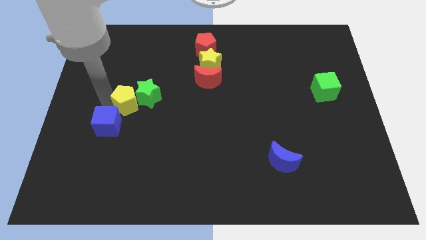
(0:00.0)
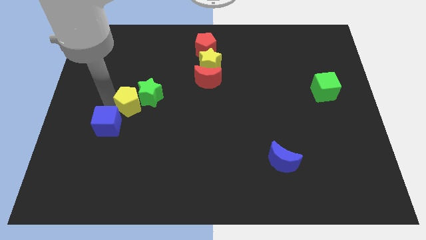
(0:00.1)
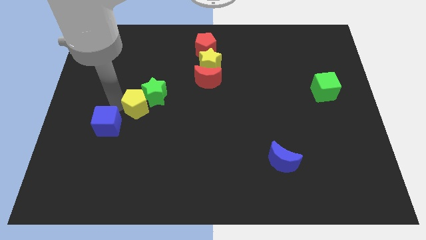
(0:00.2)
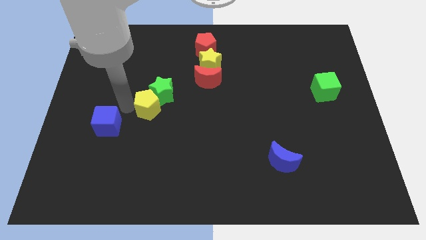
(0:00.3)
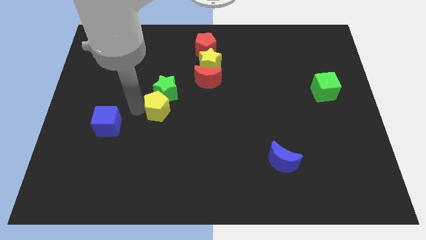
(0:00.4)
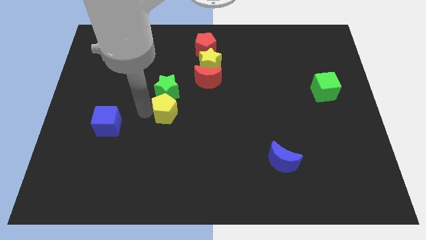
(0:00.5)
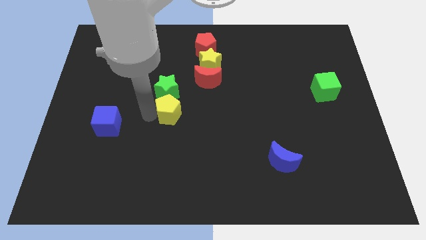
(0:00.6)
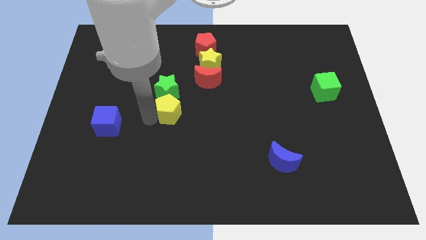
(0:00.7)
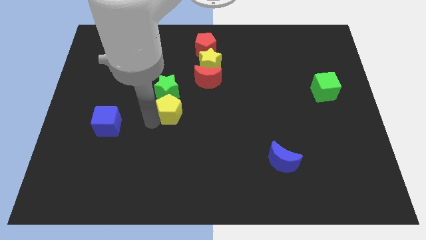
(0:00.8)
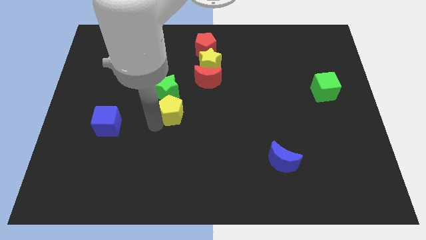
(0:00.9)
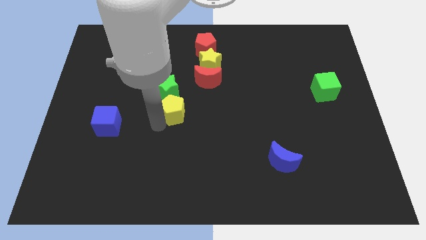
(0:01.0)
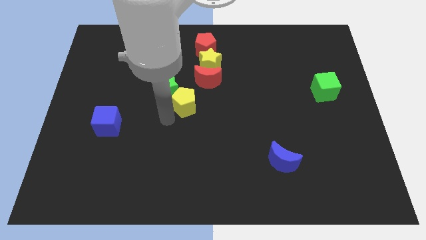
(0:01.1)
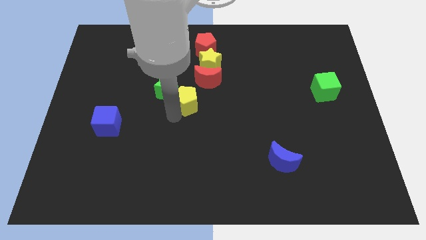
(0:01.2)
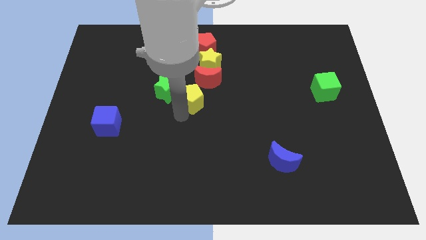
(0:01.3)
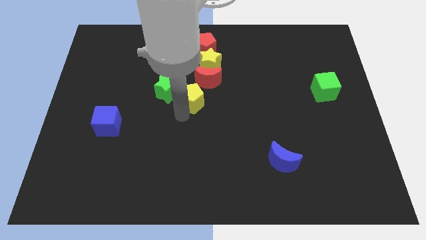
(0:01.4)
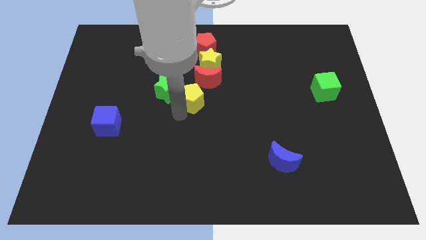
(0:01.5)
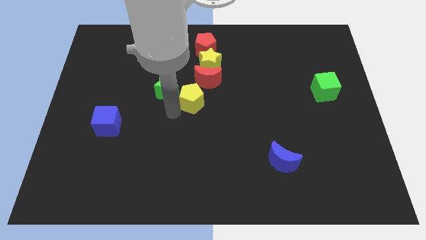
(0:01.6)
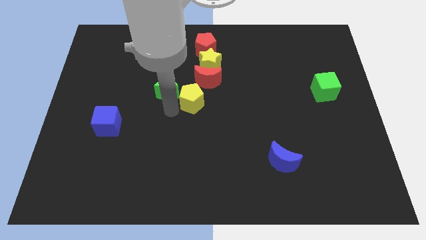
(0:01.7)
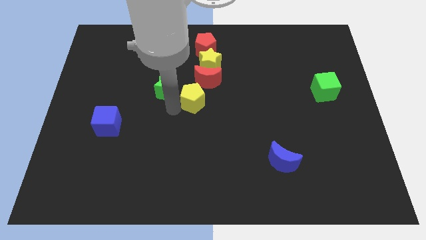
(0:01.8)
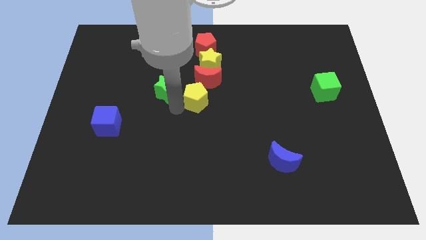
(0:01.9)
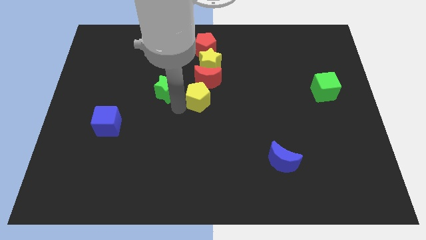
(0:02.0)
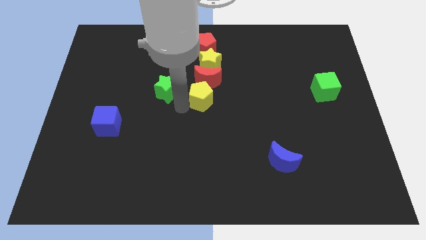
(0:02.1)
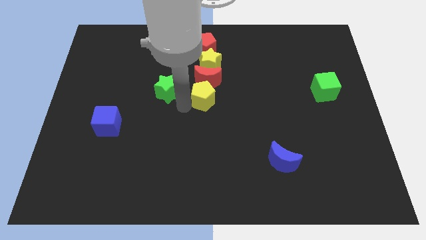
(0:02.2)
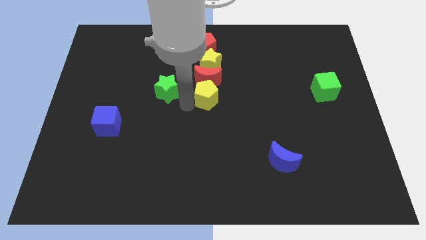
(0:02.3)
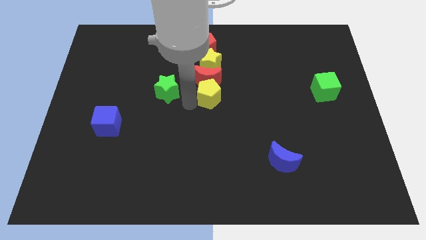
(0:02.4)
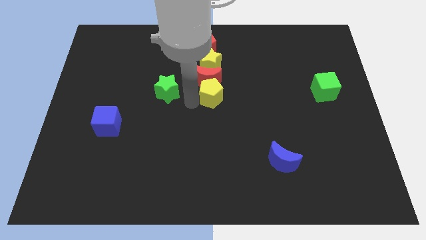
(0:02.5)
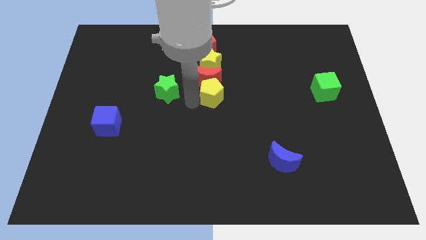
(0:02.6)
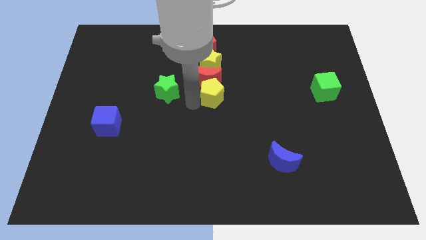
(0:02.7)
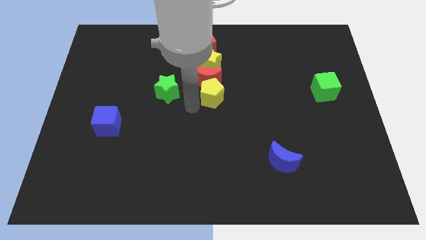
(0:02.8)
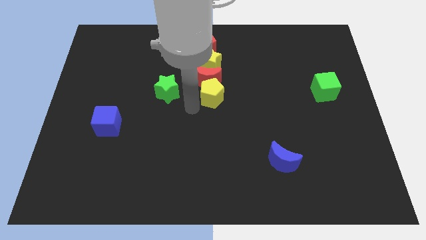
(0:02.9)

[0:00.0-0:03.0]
place the yellow pentagon below red moon

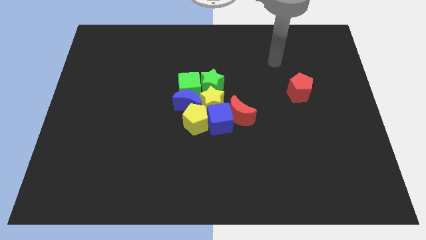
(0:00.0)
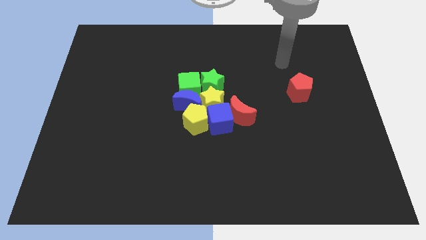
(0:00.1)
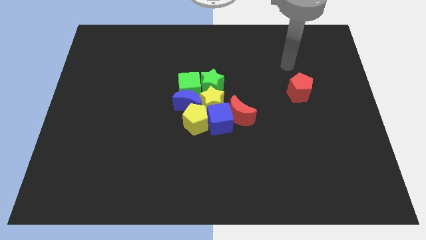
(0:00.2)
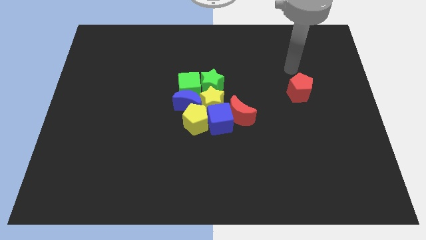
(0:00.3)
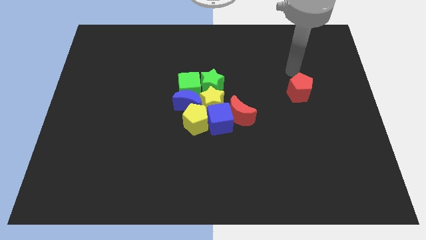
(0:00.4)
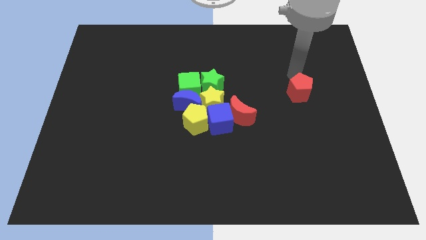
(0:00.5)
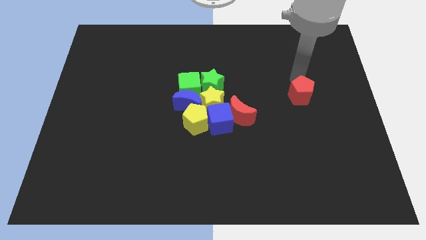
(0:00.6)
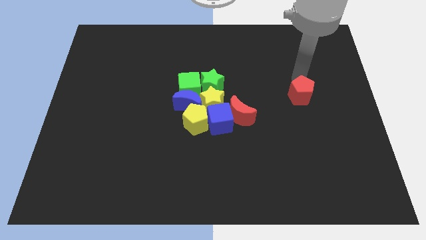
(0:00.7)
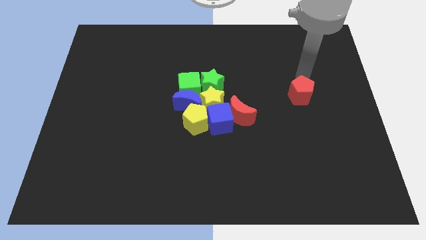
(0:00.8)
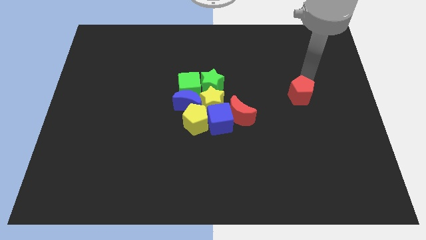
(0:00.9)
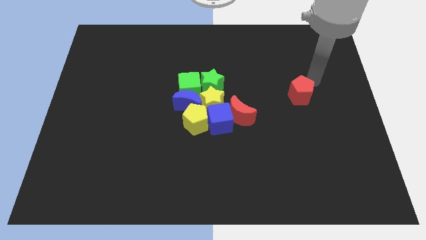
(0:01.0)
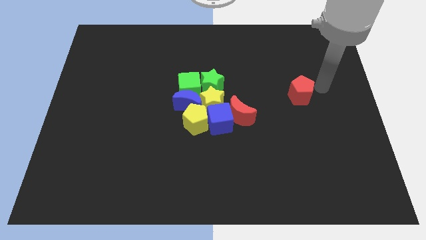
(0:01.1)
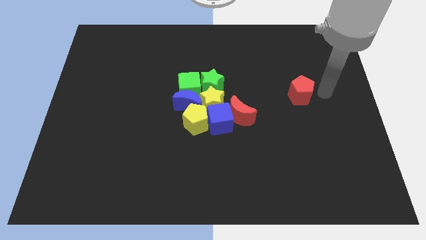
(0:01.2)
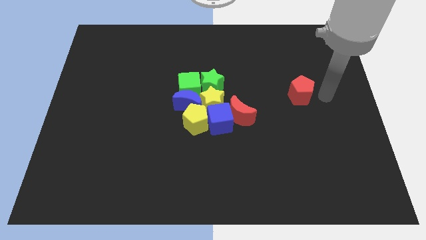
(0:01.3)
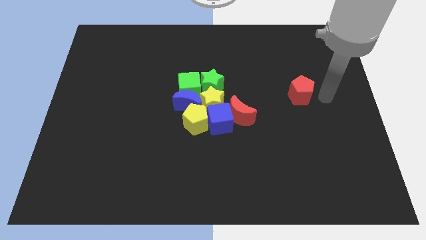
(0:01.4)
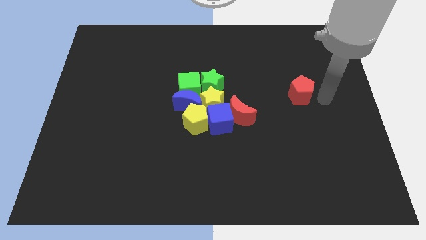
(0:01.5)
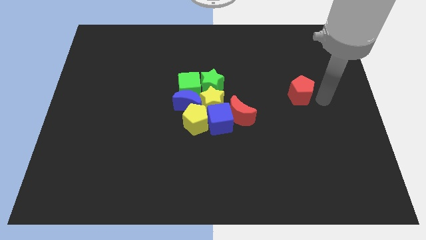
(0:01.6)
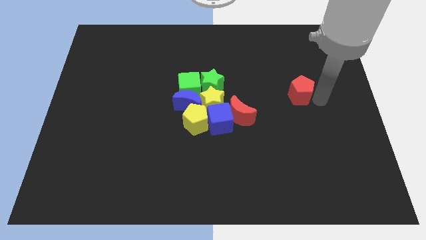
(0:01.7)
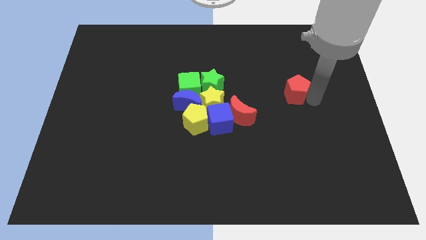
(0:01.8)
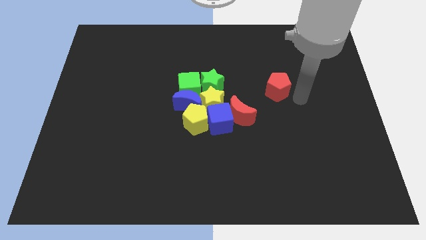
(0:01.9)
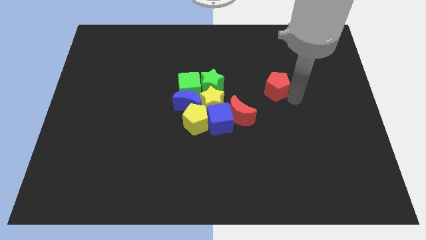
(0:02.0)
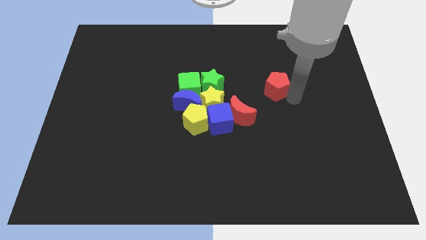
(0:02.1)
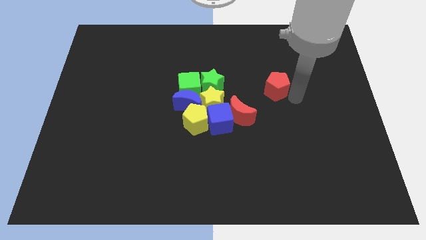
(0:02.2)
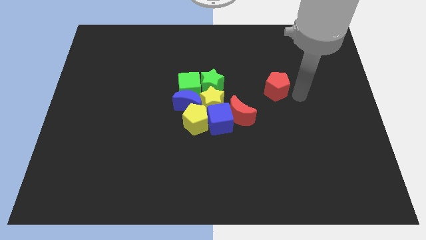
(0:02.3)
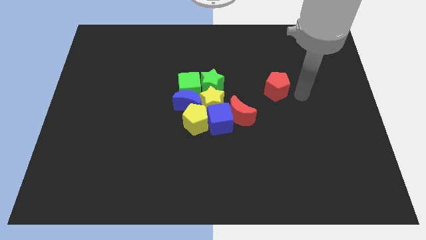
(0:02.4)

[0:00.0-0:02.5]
place the red pentagon diagonally top right to the red moon

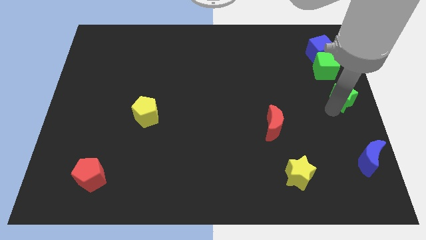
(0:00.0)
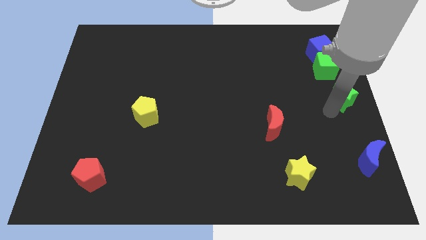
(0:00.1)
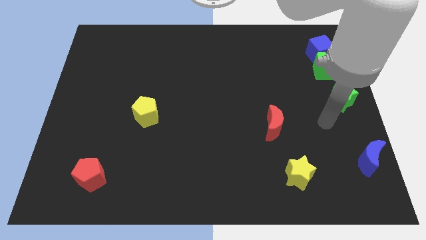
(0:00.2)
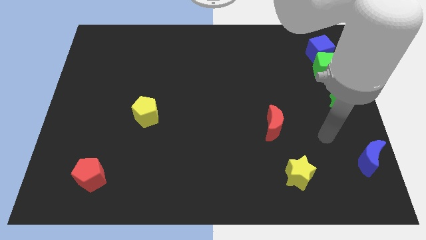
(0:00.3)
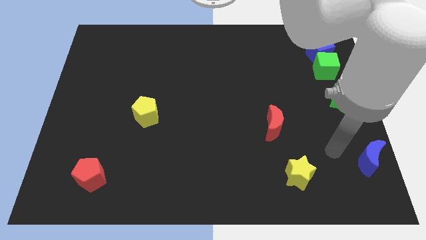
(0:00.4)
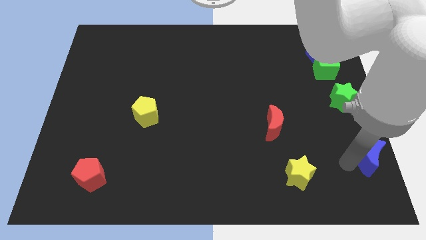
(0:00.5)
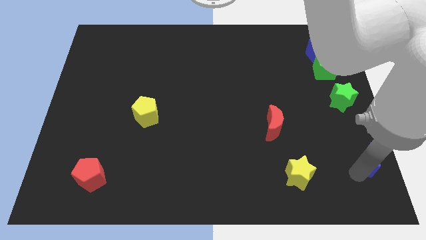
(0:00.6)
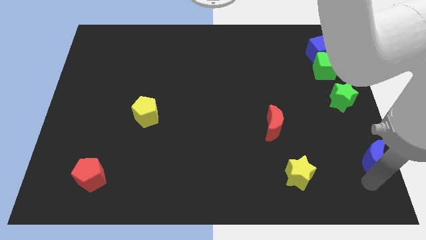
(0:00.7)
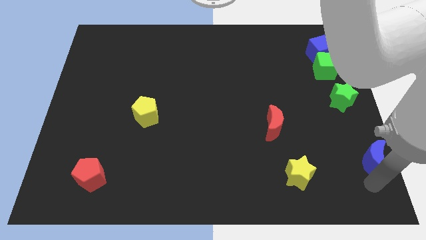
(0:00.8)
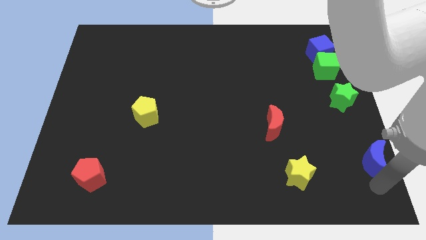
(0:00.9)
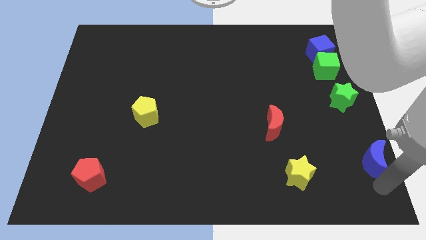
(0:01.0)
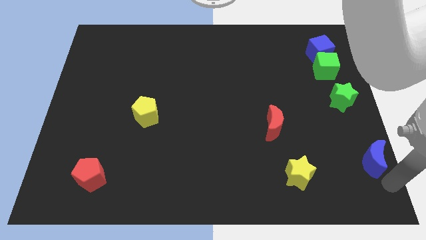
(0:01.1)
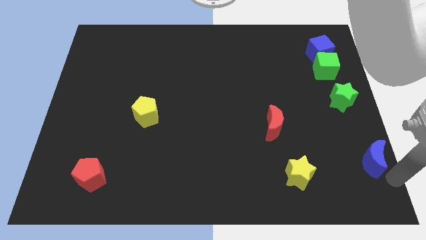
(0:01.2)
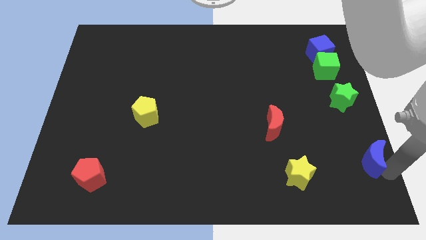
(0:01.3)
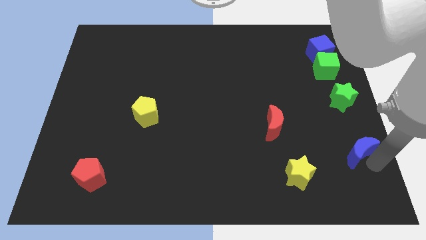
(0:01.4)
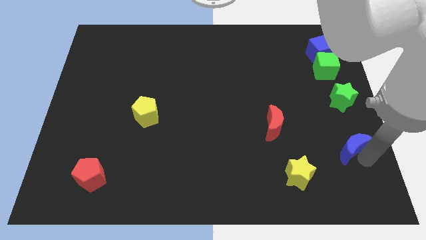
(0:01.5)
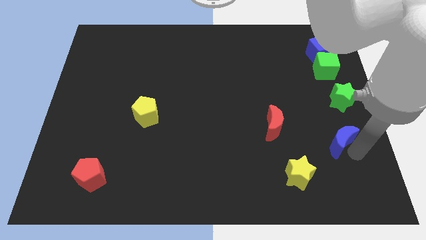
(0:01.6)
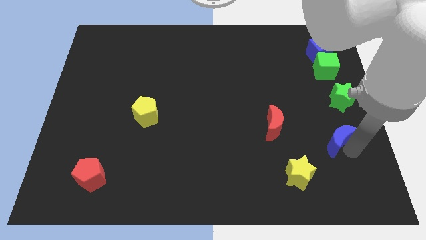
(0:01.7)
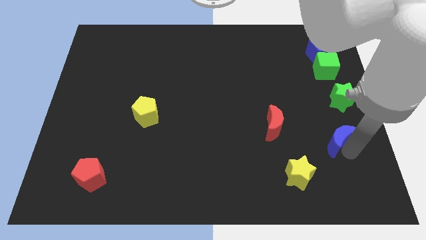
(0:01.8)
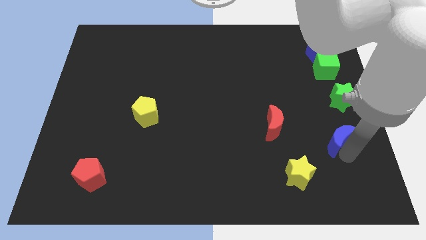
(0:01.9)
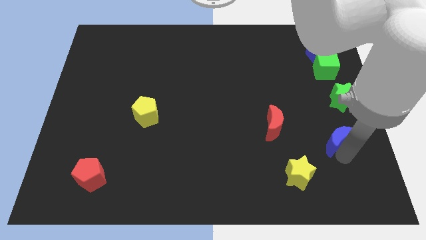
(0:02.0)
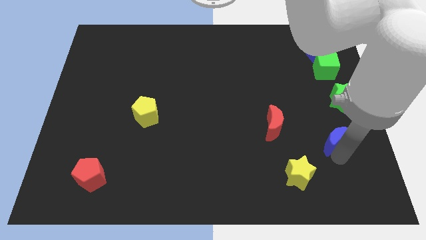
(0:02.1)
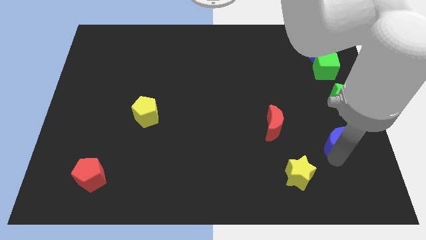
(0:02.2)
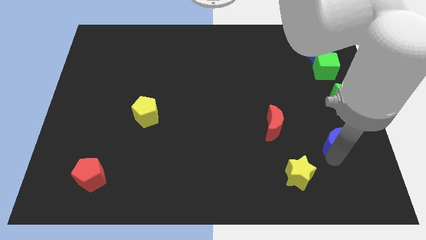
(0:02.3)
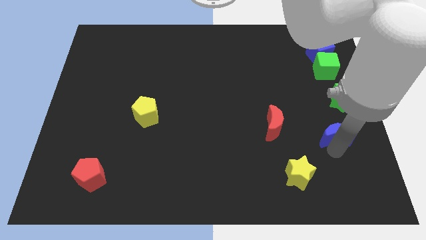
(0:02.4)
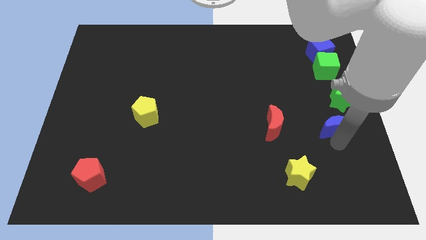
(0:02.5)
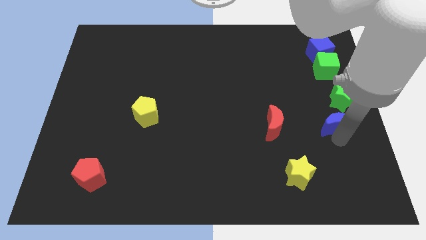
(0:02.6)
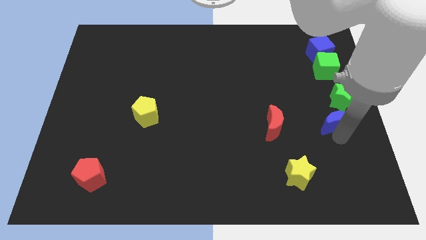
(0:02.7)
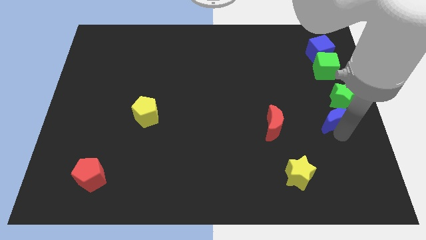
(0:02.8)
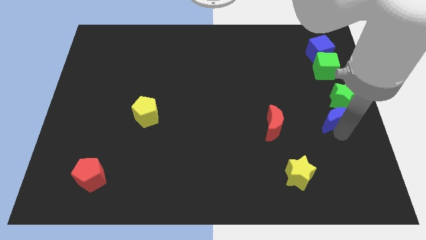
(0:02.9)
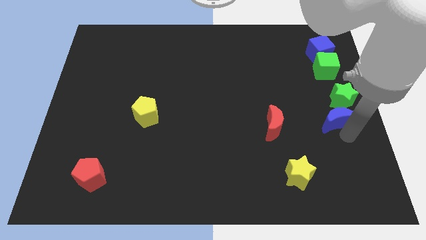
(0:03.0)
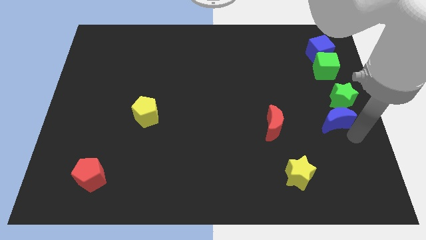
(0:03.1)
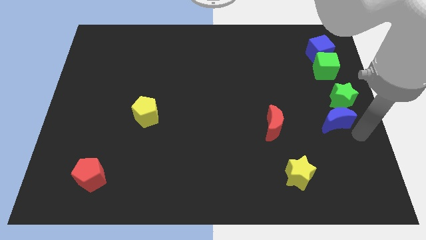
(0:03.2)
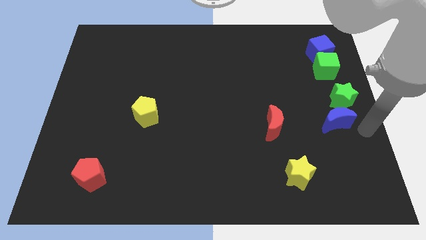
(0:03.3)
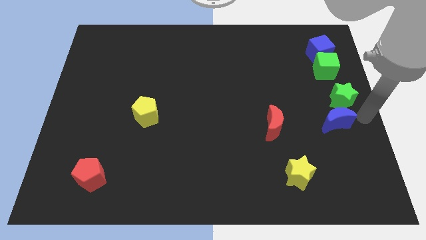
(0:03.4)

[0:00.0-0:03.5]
push blue moon towards green star
